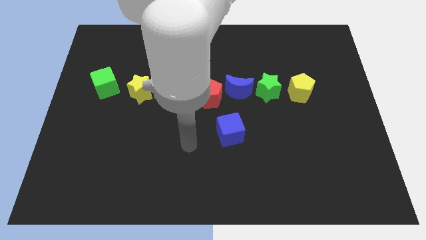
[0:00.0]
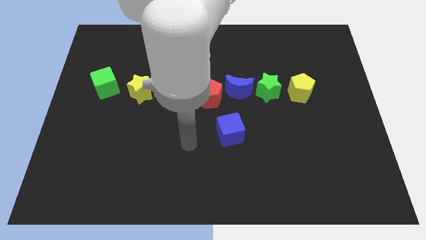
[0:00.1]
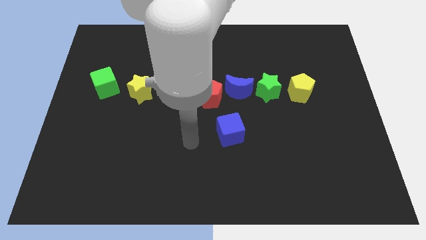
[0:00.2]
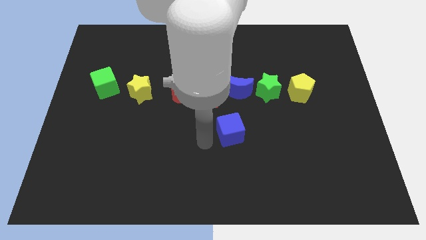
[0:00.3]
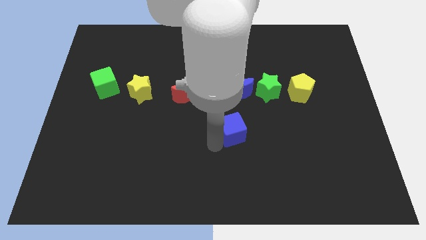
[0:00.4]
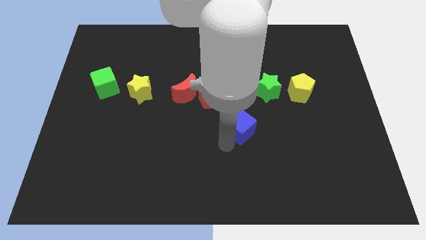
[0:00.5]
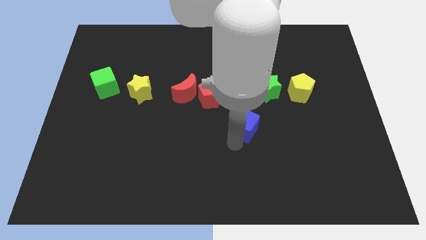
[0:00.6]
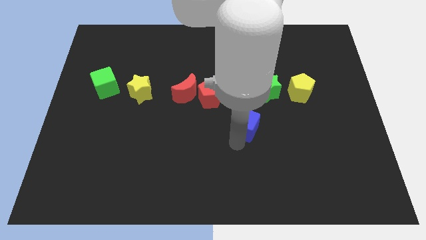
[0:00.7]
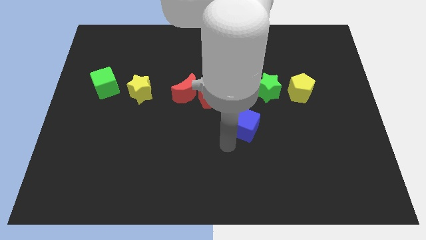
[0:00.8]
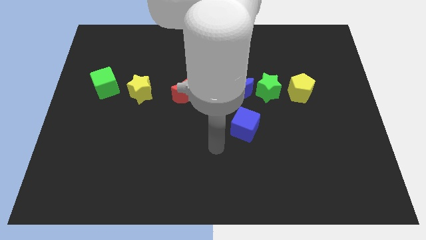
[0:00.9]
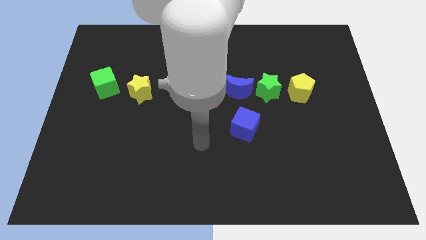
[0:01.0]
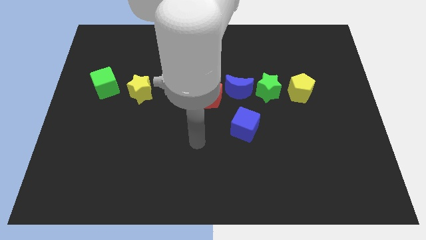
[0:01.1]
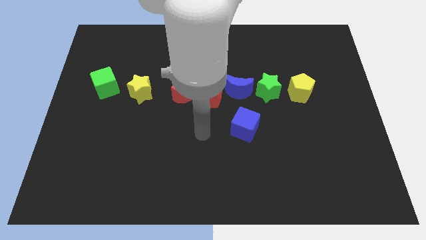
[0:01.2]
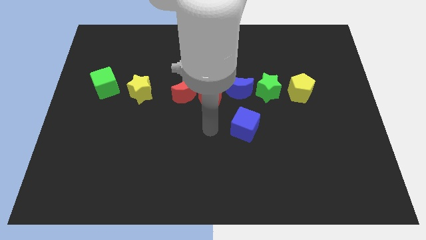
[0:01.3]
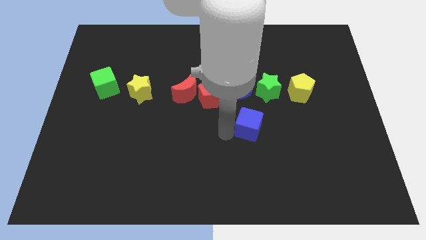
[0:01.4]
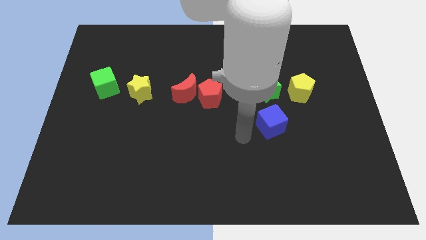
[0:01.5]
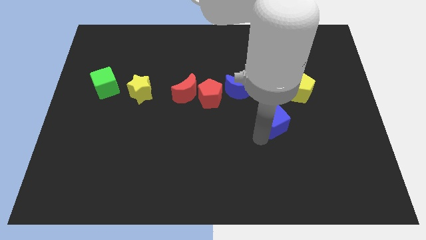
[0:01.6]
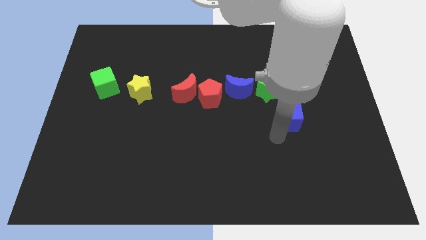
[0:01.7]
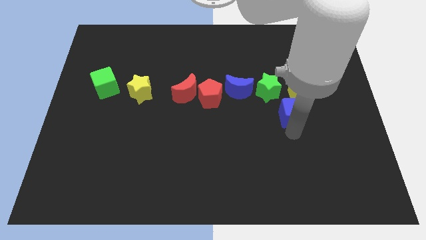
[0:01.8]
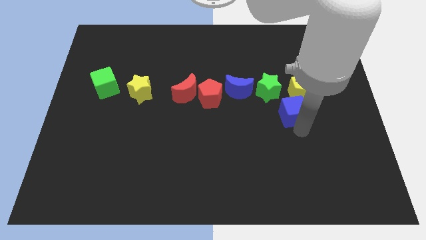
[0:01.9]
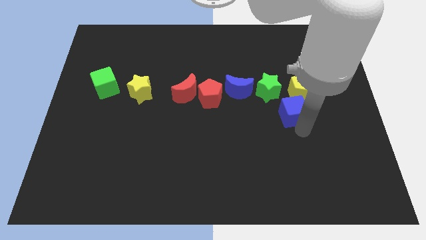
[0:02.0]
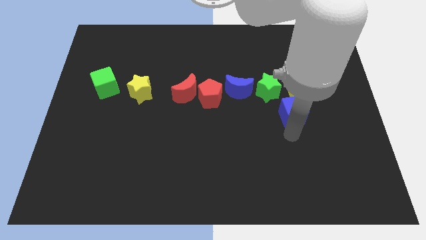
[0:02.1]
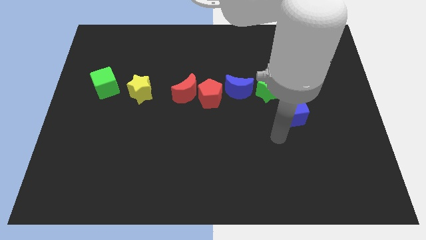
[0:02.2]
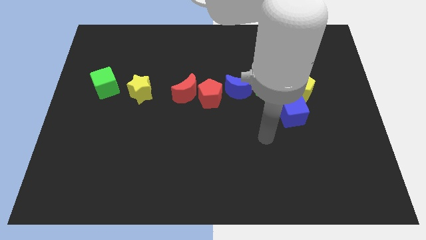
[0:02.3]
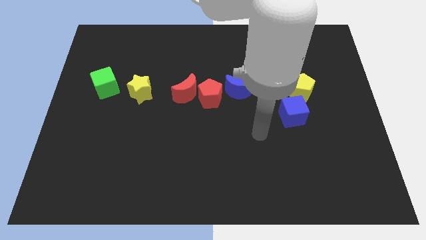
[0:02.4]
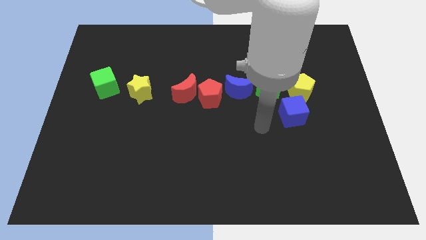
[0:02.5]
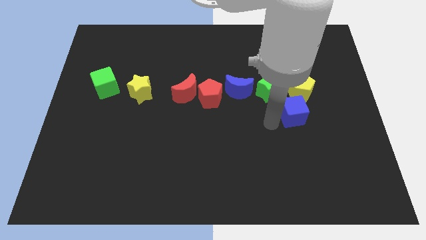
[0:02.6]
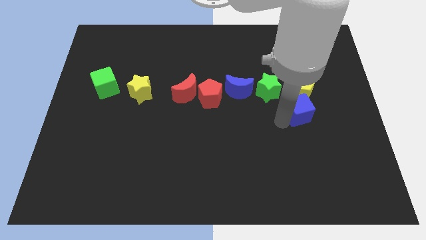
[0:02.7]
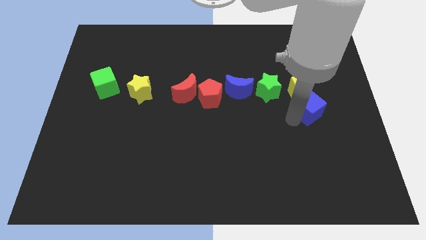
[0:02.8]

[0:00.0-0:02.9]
push the blue cube at the bottom of yellow pentagon

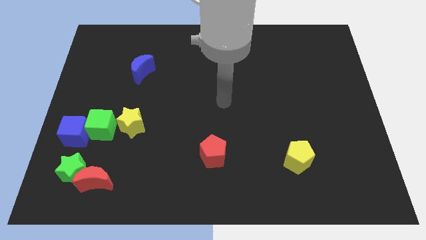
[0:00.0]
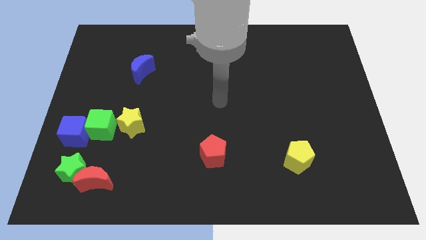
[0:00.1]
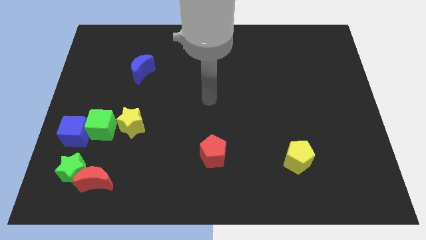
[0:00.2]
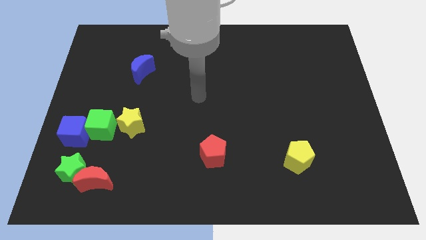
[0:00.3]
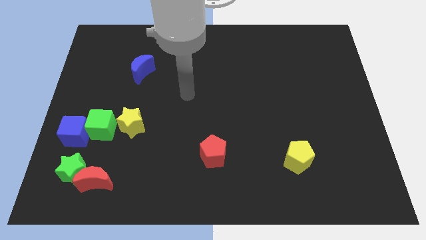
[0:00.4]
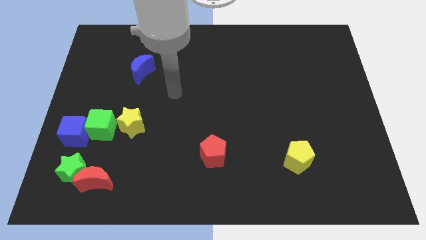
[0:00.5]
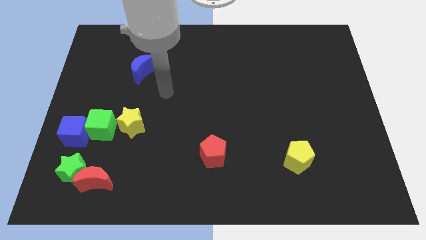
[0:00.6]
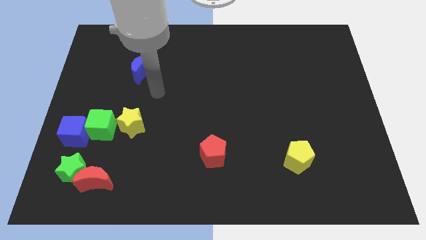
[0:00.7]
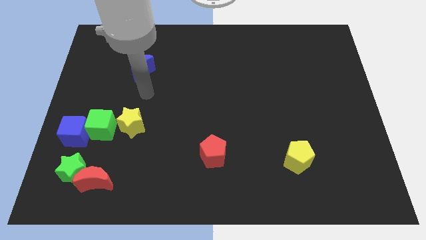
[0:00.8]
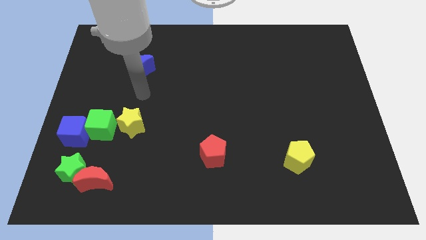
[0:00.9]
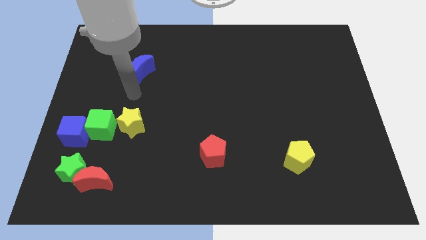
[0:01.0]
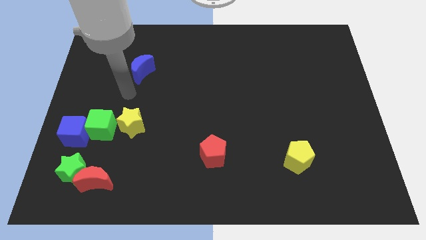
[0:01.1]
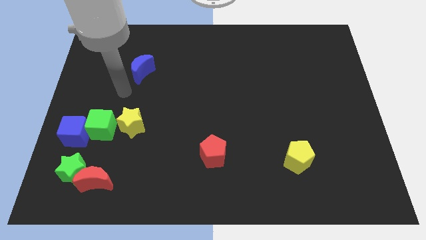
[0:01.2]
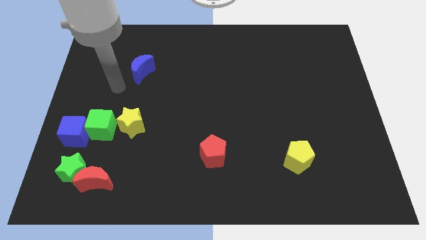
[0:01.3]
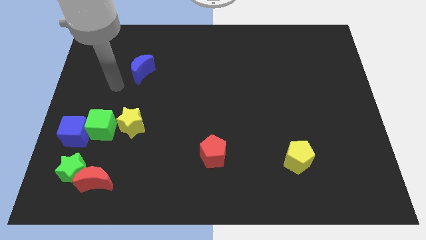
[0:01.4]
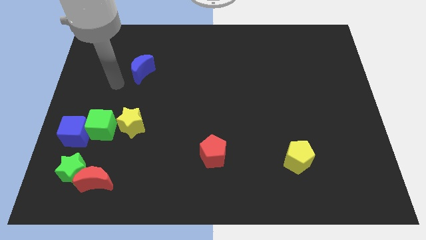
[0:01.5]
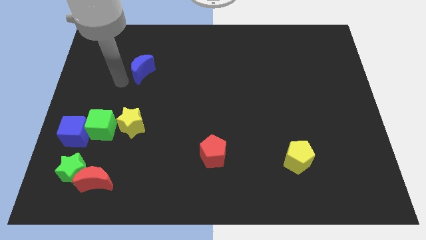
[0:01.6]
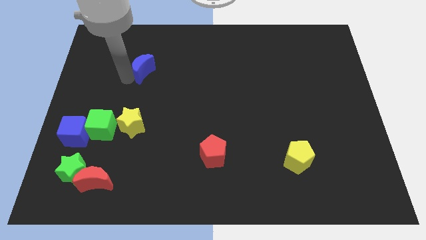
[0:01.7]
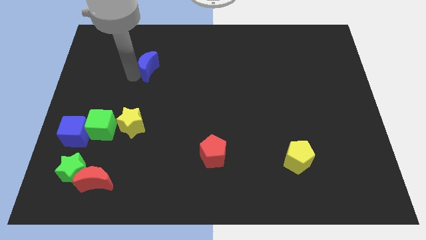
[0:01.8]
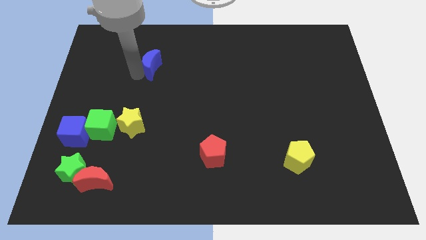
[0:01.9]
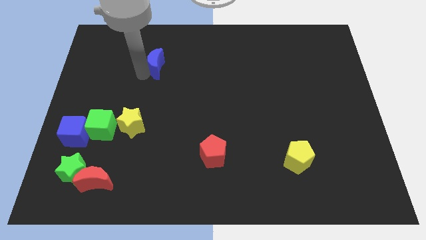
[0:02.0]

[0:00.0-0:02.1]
push the blue crescent slightly to the right side

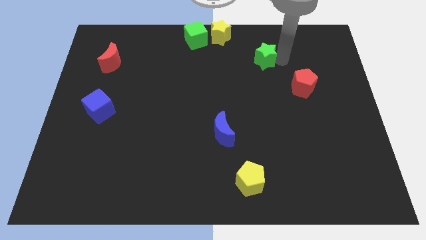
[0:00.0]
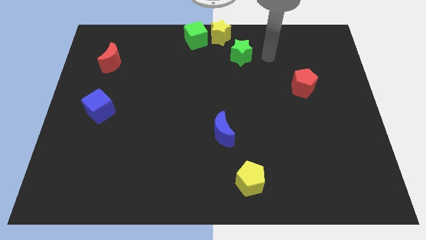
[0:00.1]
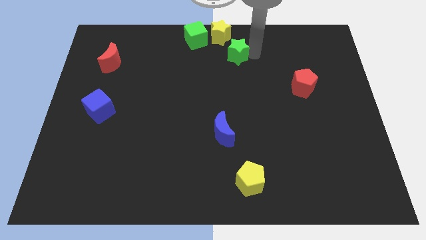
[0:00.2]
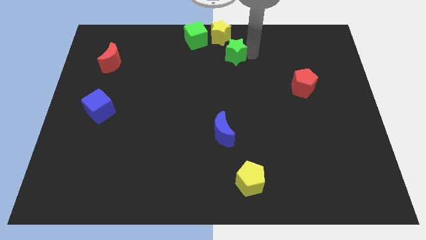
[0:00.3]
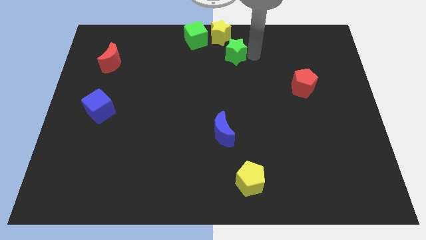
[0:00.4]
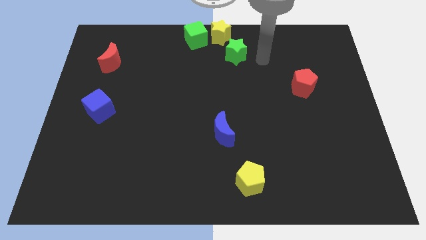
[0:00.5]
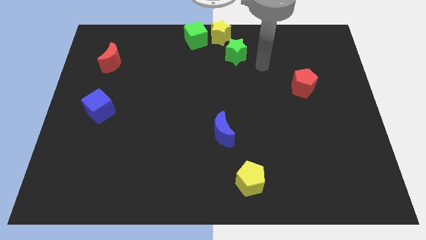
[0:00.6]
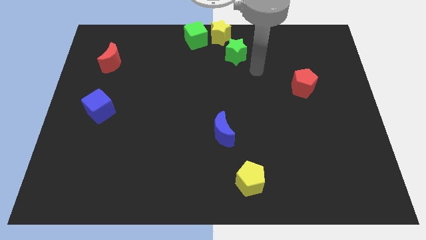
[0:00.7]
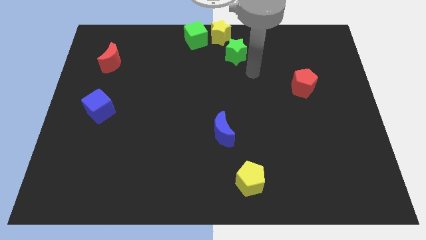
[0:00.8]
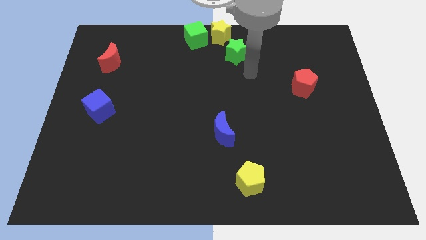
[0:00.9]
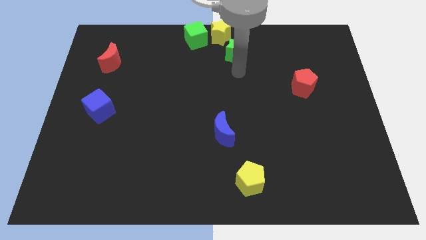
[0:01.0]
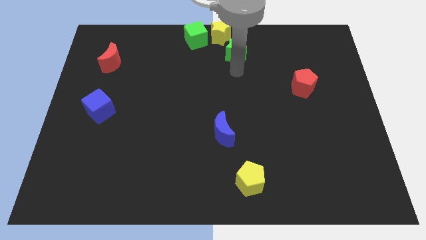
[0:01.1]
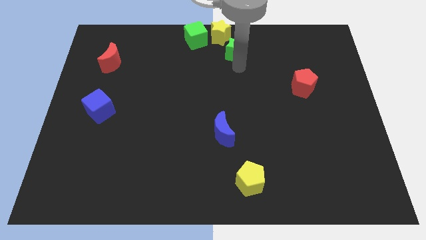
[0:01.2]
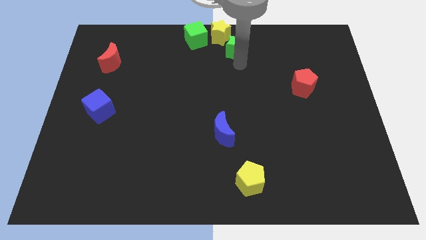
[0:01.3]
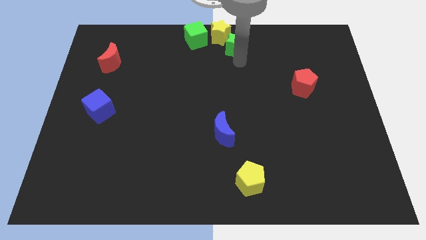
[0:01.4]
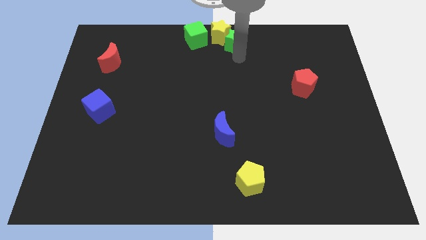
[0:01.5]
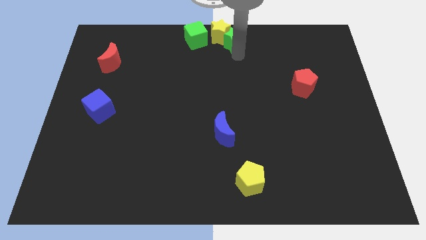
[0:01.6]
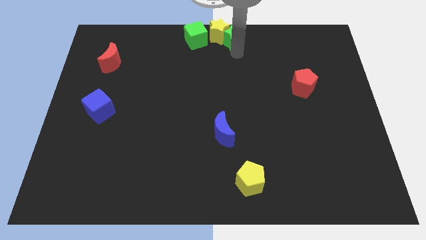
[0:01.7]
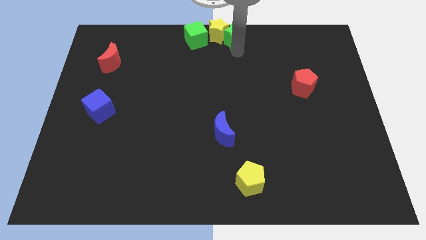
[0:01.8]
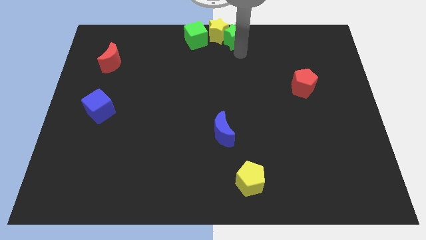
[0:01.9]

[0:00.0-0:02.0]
push the green star into the yellow star

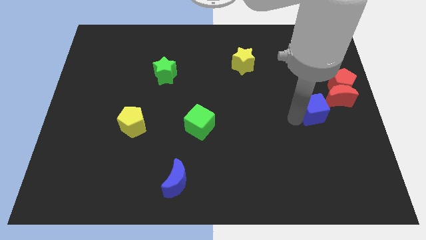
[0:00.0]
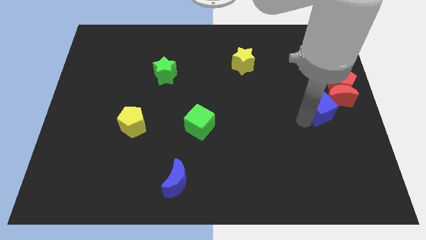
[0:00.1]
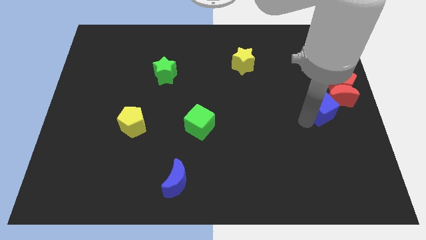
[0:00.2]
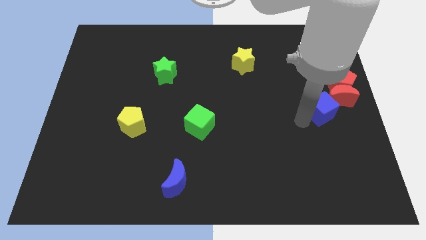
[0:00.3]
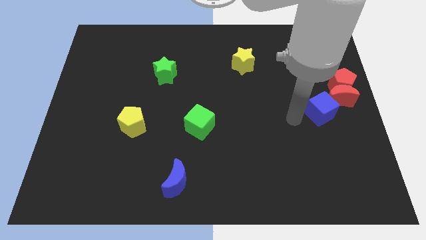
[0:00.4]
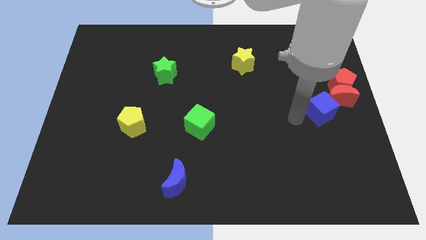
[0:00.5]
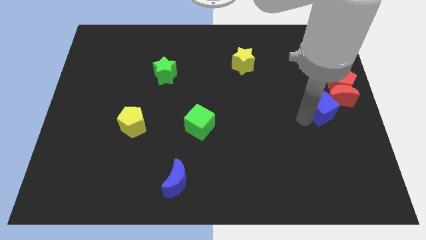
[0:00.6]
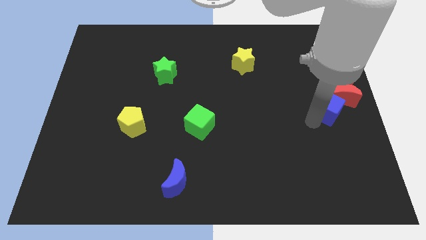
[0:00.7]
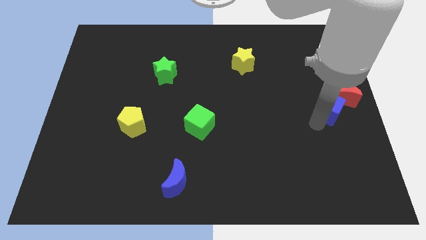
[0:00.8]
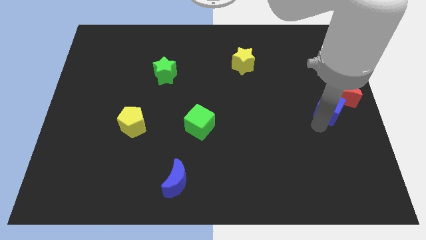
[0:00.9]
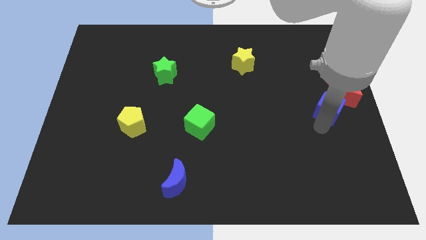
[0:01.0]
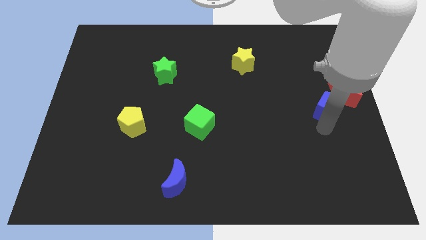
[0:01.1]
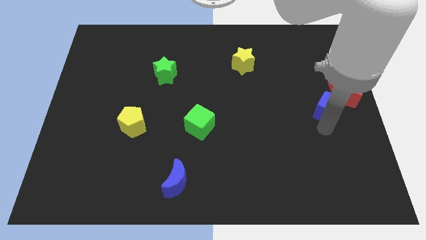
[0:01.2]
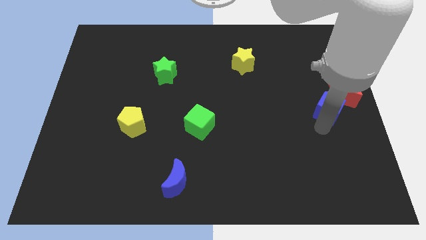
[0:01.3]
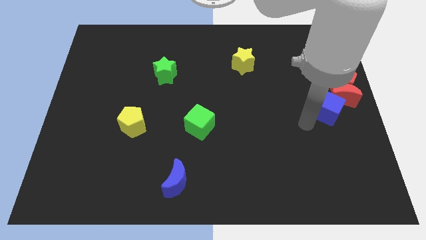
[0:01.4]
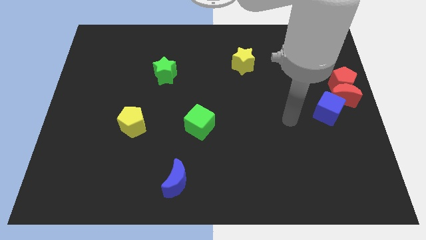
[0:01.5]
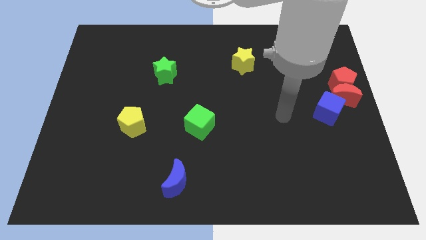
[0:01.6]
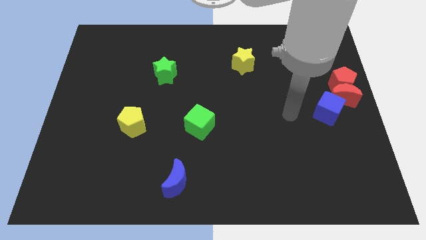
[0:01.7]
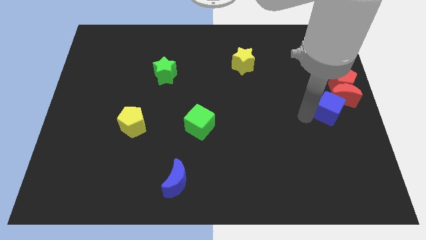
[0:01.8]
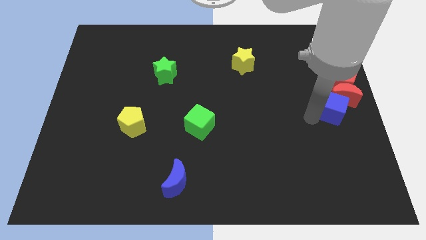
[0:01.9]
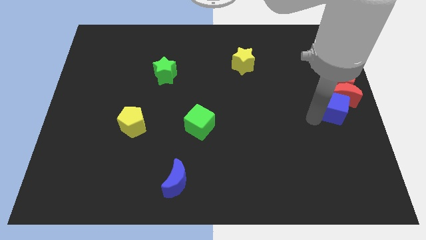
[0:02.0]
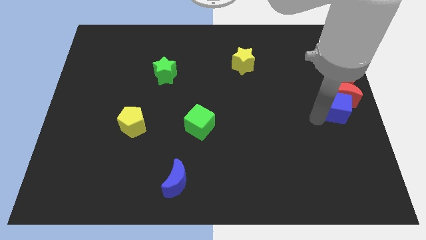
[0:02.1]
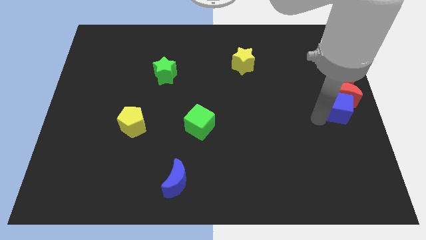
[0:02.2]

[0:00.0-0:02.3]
place the blue cube below the red crescent
